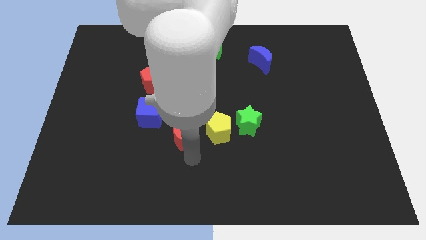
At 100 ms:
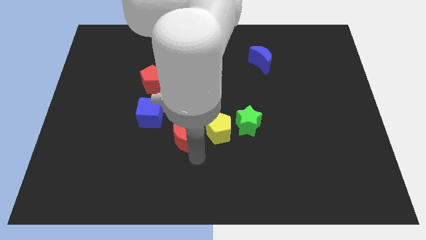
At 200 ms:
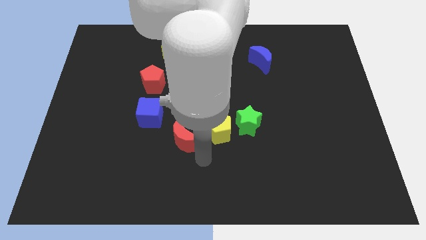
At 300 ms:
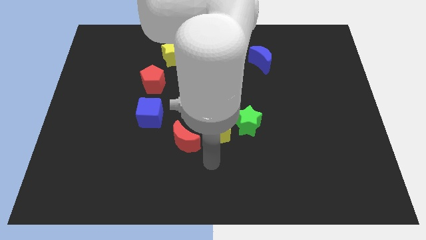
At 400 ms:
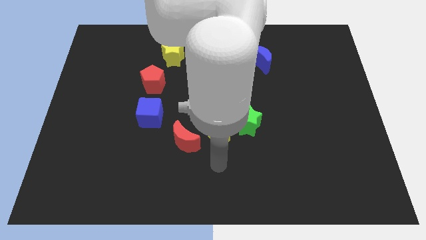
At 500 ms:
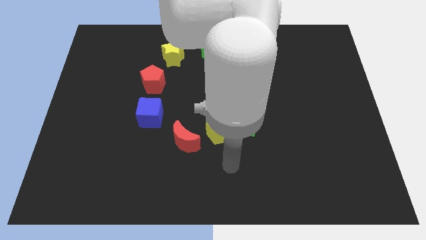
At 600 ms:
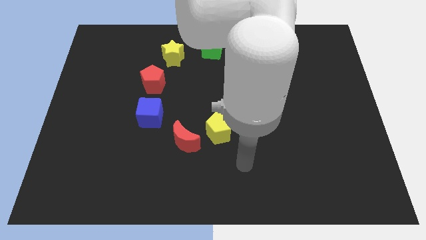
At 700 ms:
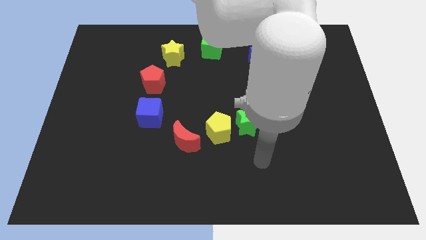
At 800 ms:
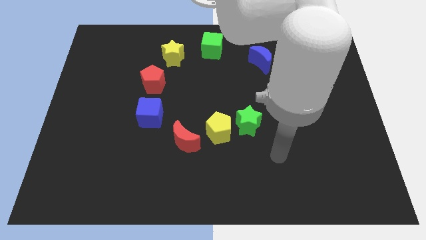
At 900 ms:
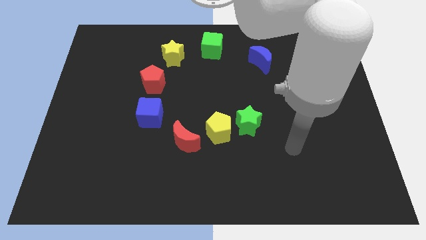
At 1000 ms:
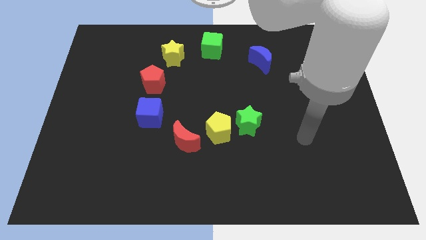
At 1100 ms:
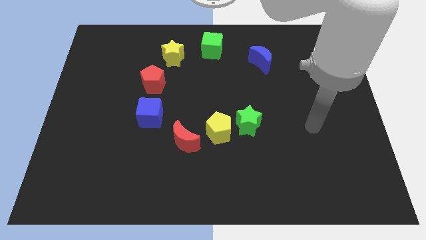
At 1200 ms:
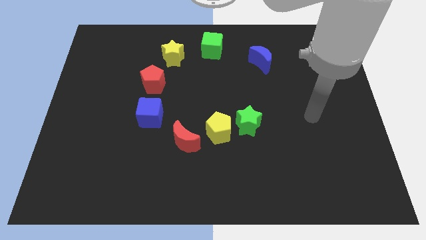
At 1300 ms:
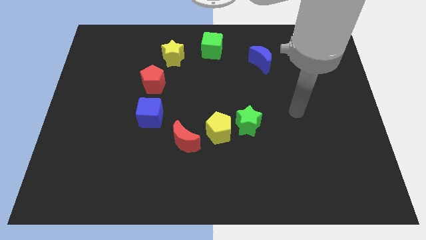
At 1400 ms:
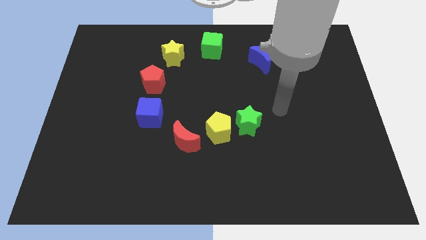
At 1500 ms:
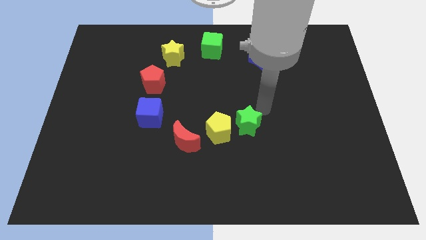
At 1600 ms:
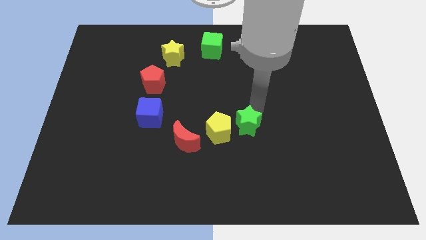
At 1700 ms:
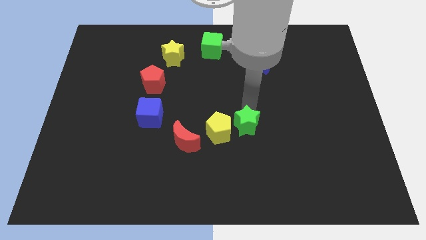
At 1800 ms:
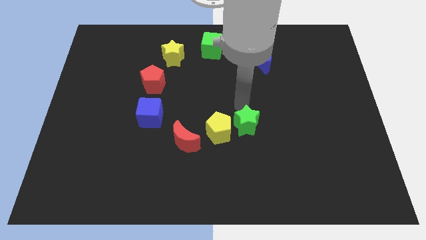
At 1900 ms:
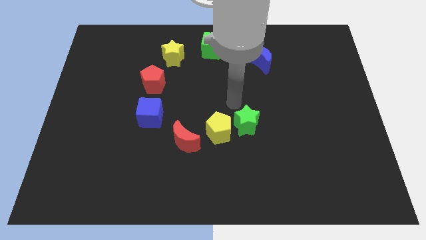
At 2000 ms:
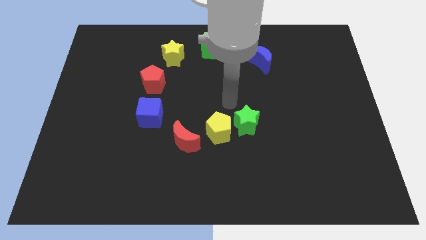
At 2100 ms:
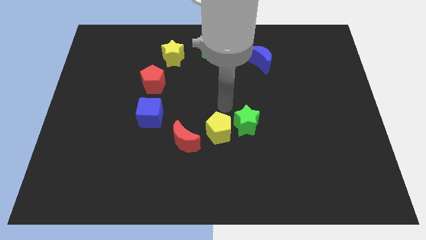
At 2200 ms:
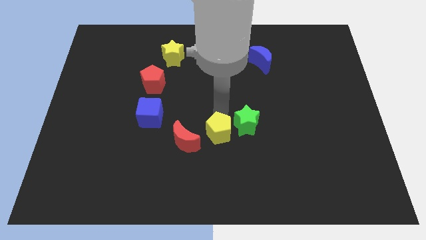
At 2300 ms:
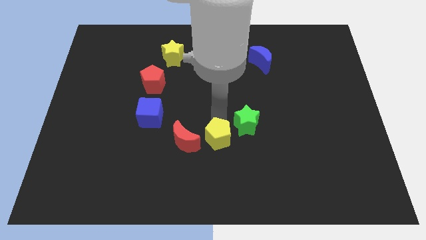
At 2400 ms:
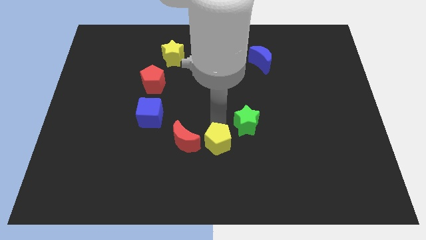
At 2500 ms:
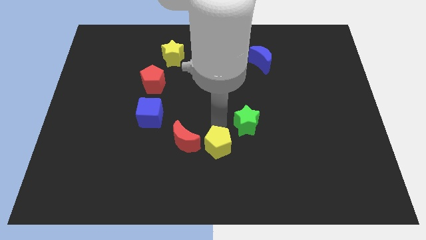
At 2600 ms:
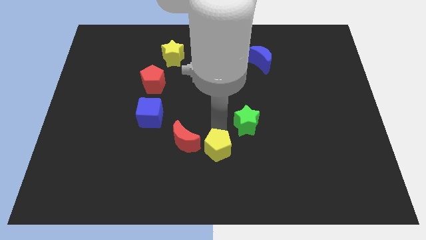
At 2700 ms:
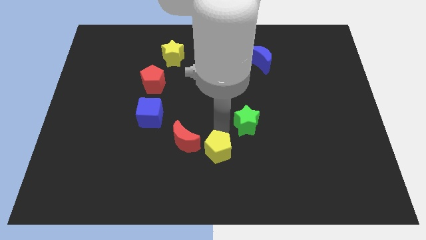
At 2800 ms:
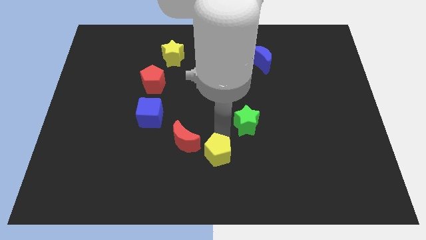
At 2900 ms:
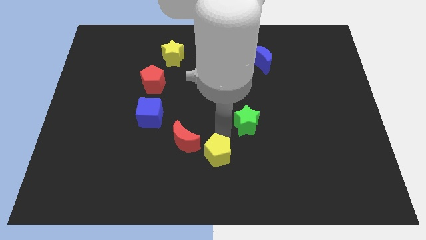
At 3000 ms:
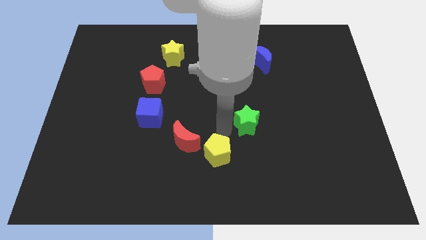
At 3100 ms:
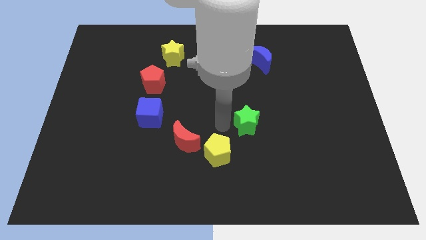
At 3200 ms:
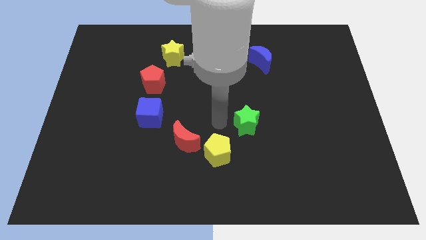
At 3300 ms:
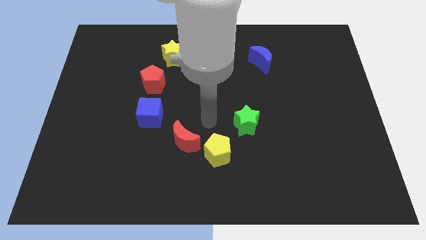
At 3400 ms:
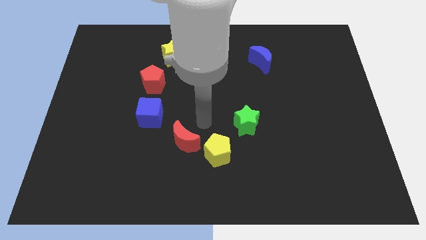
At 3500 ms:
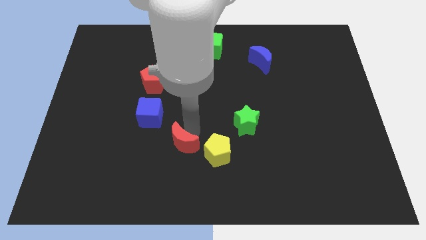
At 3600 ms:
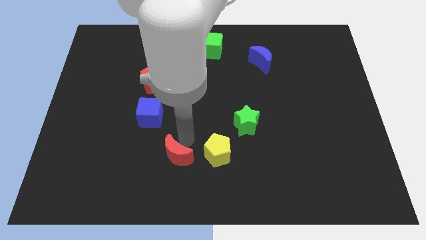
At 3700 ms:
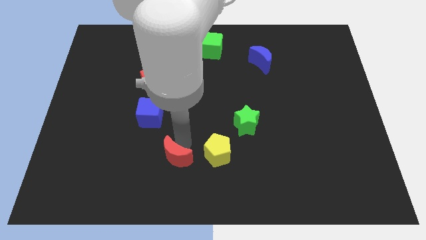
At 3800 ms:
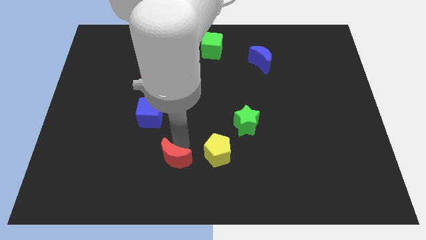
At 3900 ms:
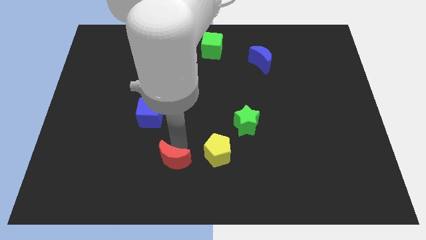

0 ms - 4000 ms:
move the yellow pentagon to bottom side

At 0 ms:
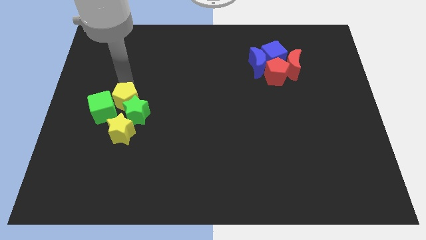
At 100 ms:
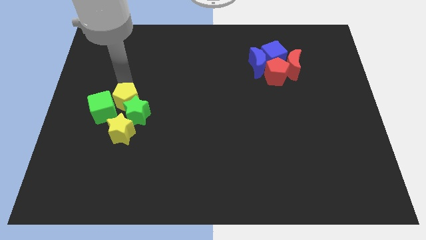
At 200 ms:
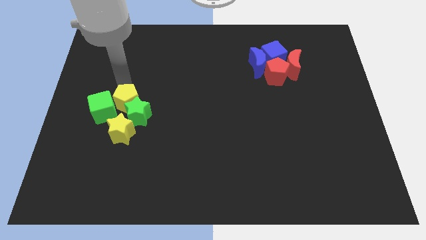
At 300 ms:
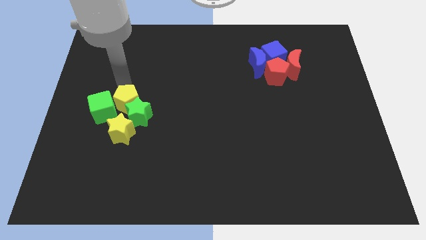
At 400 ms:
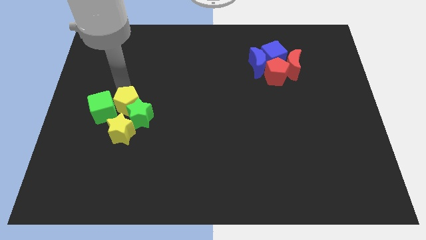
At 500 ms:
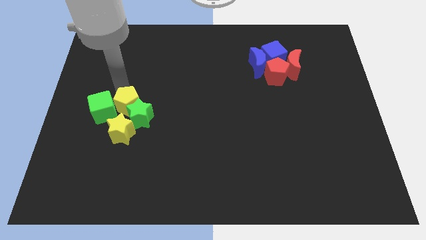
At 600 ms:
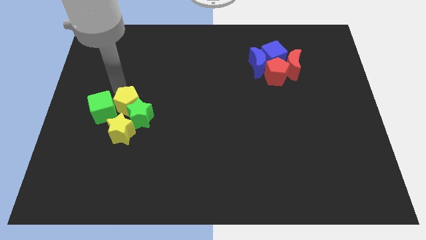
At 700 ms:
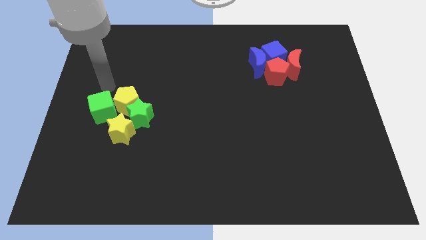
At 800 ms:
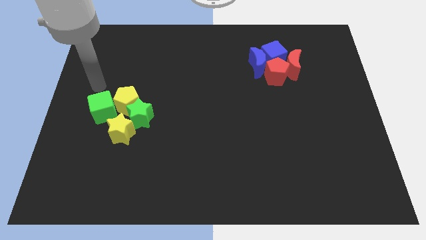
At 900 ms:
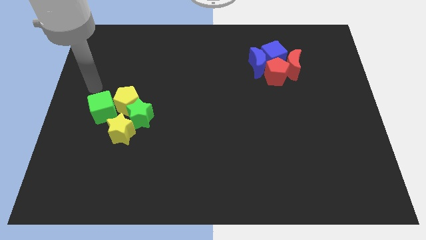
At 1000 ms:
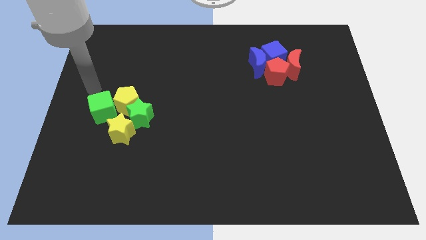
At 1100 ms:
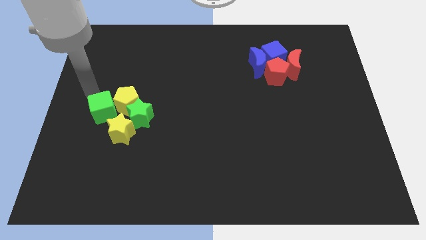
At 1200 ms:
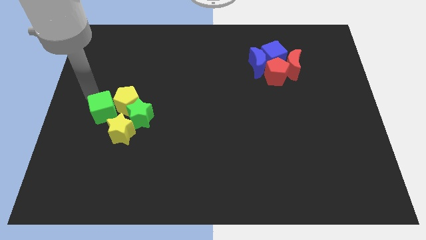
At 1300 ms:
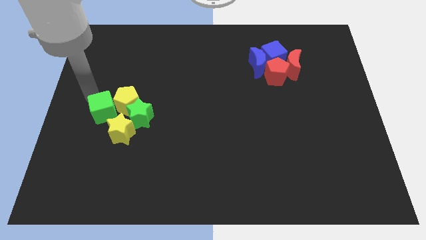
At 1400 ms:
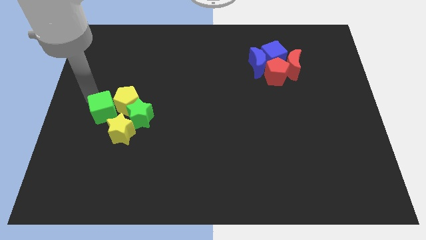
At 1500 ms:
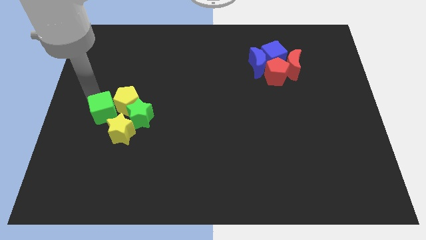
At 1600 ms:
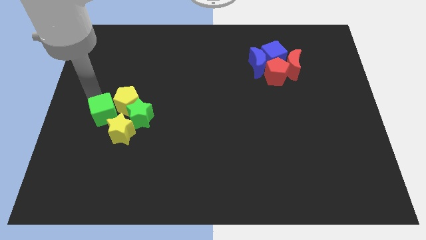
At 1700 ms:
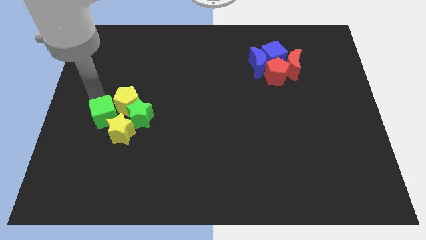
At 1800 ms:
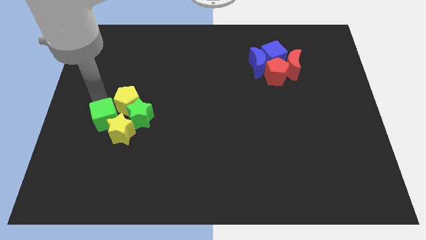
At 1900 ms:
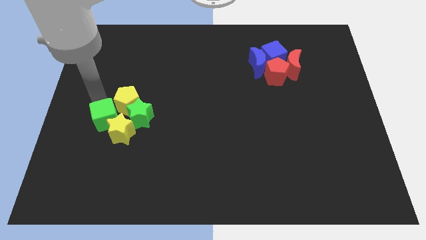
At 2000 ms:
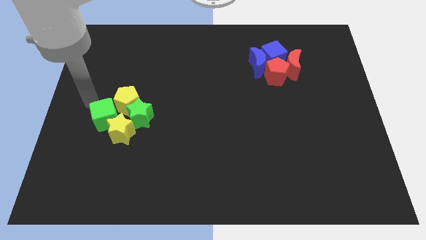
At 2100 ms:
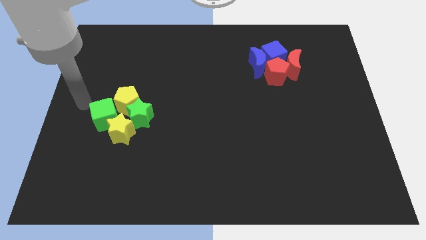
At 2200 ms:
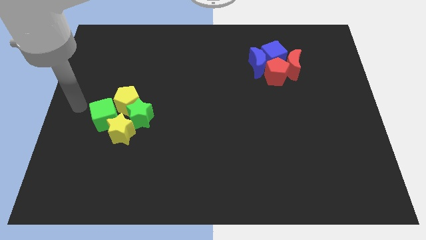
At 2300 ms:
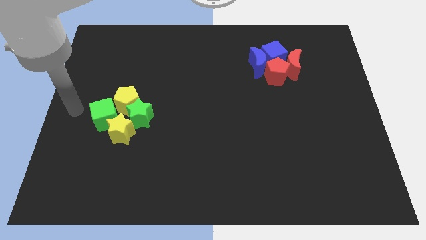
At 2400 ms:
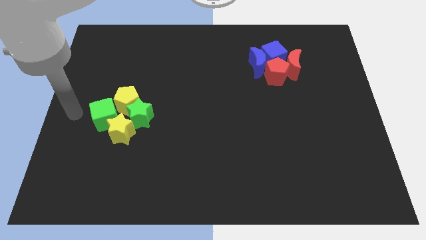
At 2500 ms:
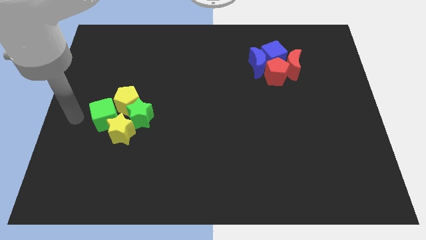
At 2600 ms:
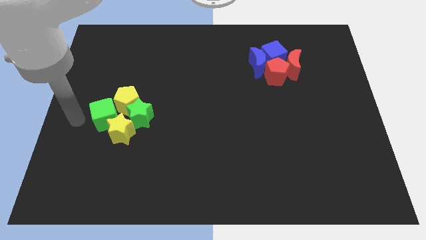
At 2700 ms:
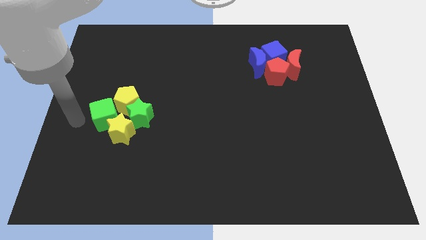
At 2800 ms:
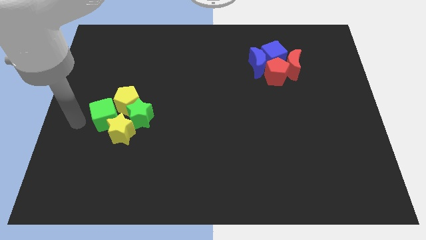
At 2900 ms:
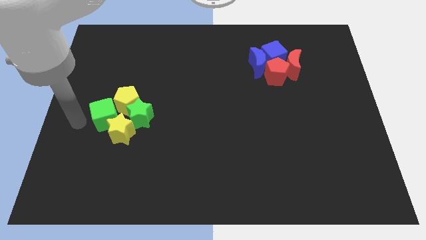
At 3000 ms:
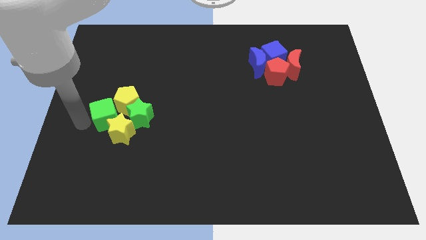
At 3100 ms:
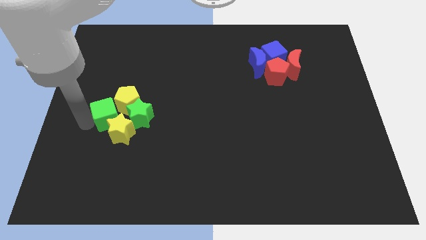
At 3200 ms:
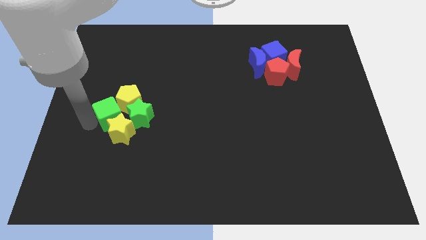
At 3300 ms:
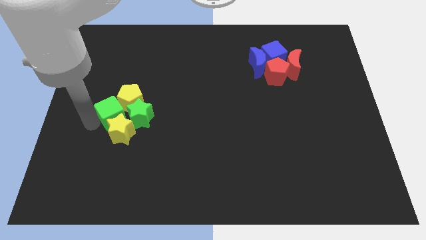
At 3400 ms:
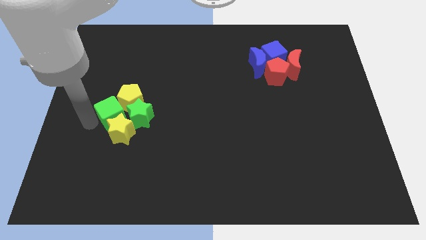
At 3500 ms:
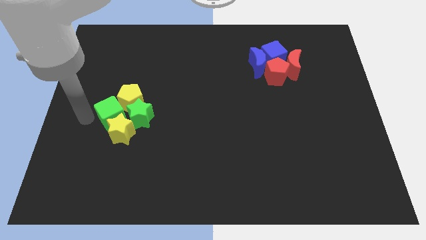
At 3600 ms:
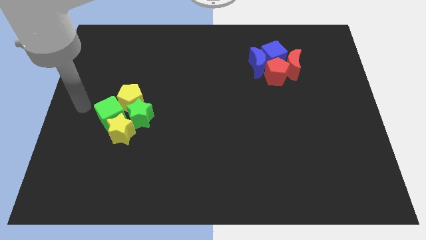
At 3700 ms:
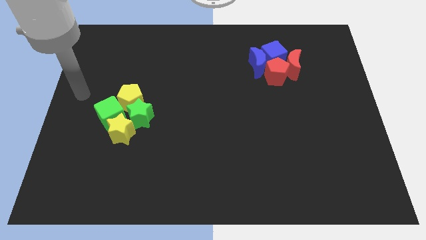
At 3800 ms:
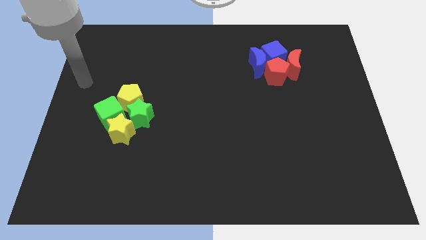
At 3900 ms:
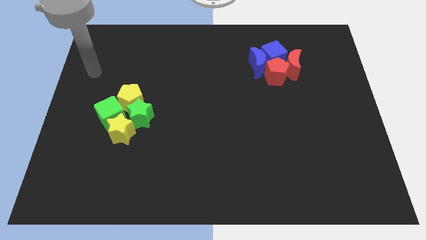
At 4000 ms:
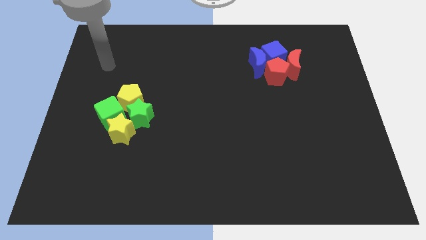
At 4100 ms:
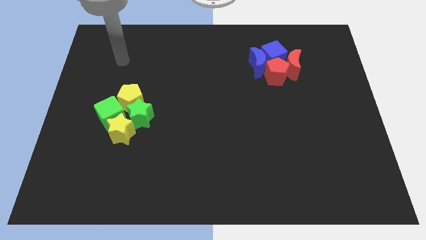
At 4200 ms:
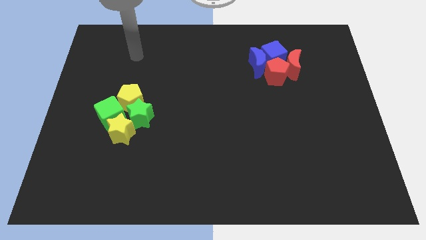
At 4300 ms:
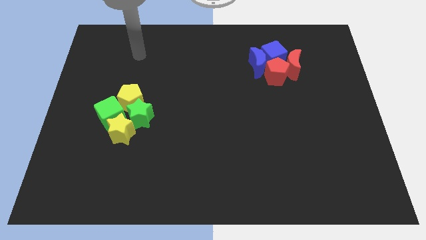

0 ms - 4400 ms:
push the green and yellow blocks to the bottom of the board

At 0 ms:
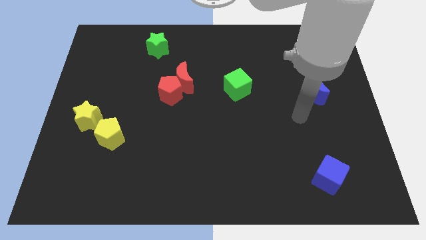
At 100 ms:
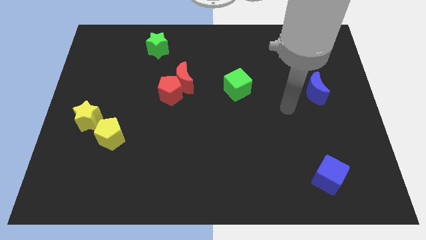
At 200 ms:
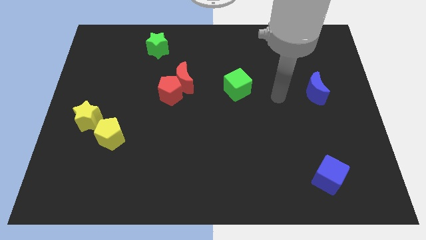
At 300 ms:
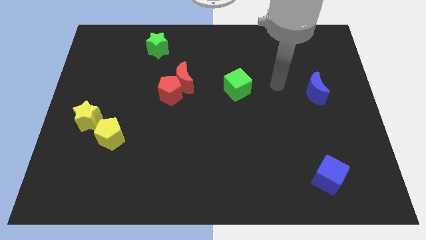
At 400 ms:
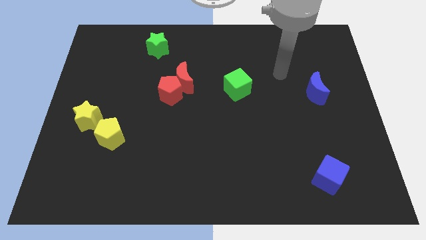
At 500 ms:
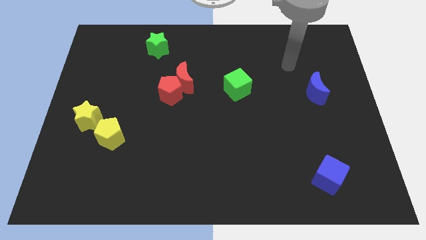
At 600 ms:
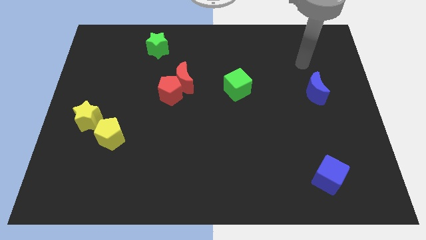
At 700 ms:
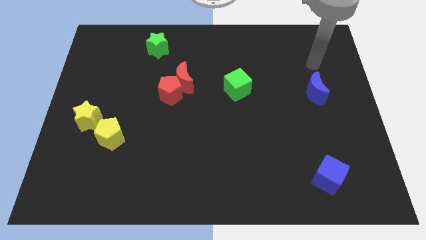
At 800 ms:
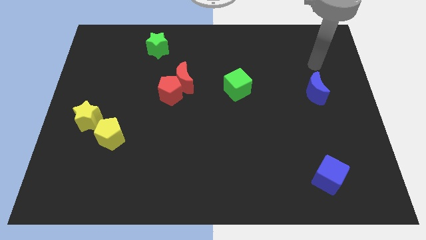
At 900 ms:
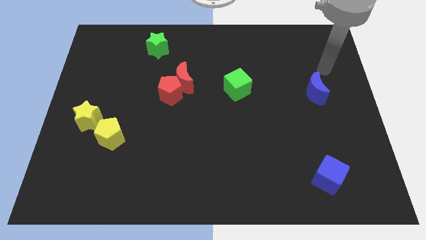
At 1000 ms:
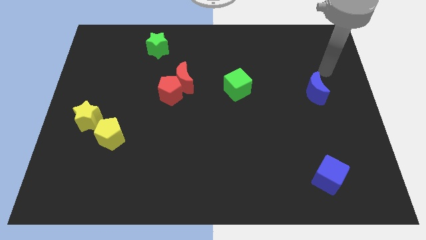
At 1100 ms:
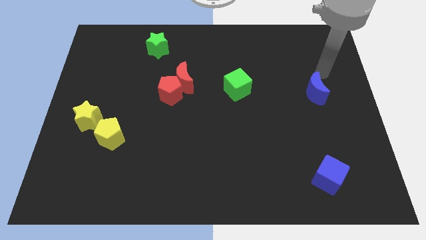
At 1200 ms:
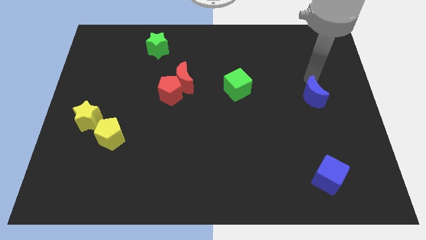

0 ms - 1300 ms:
touch the top side of the blue crescent
